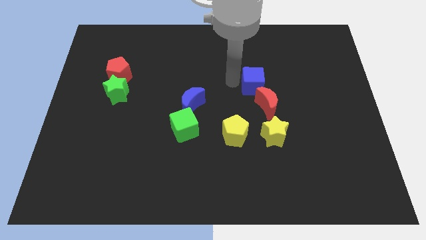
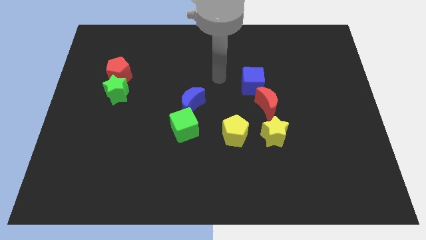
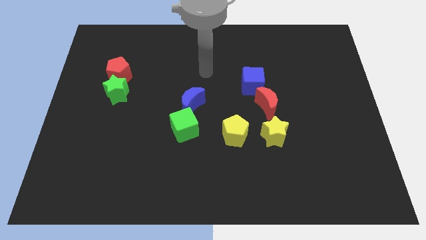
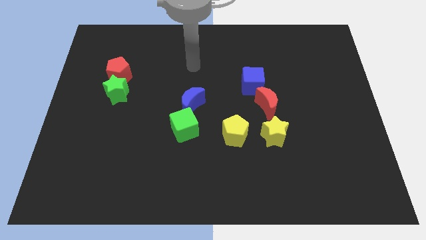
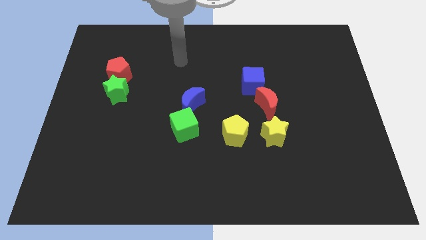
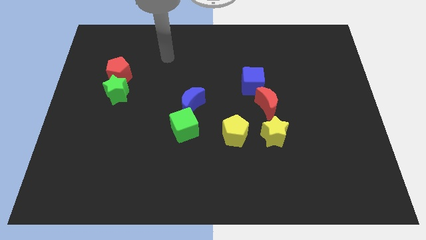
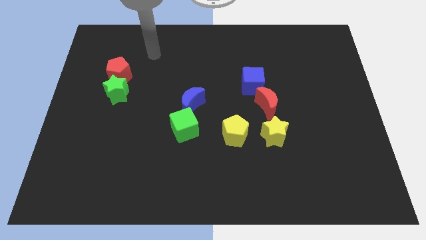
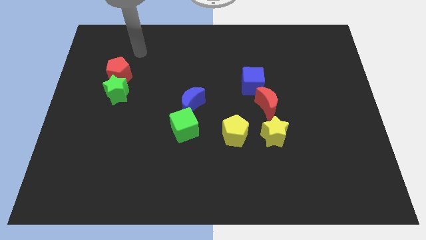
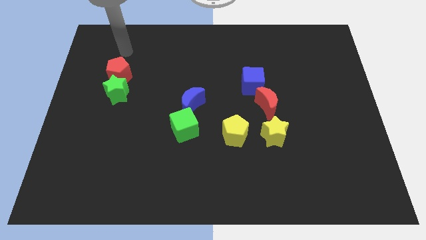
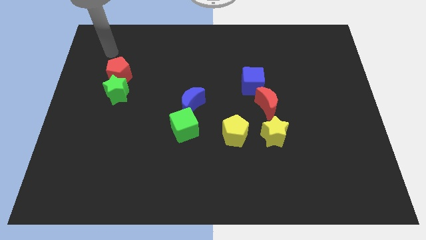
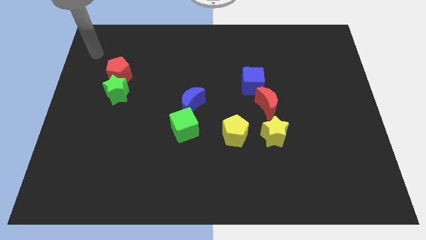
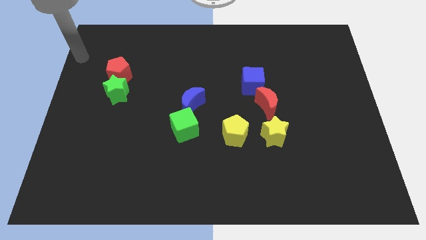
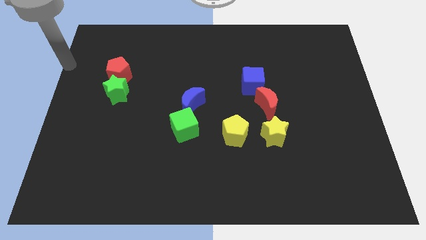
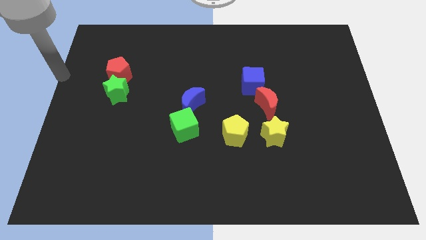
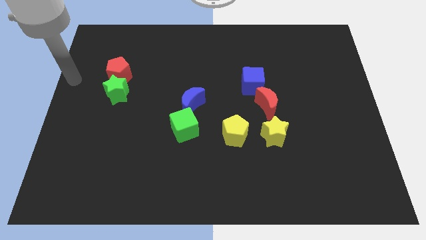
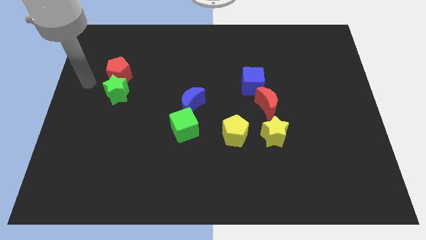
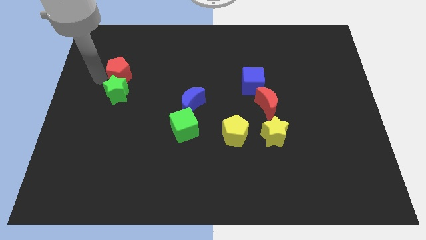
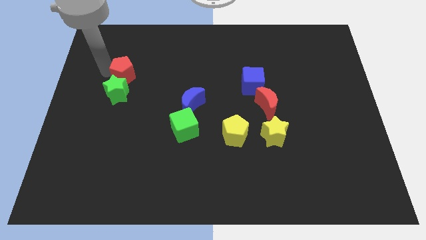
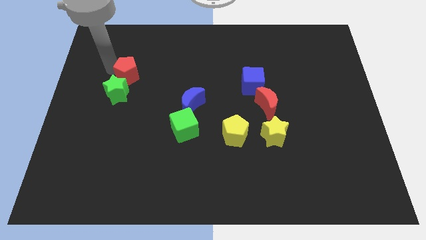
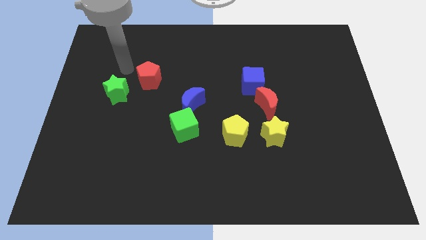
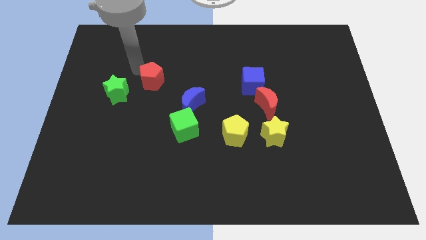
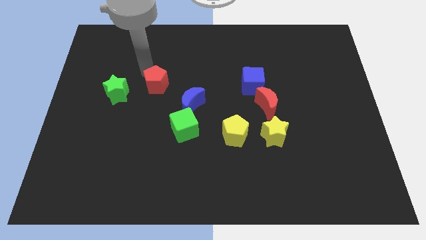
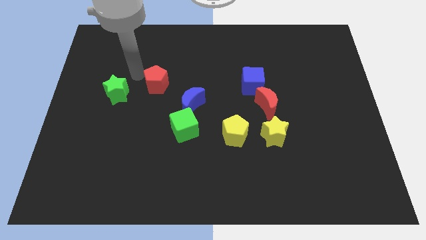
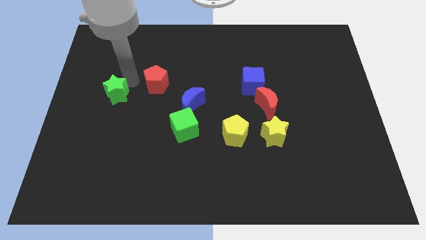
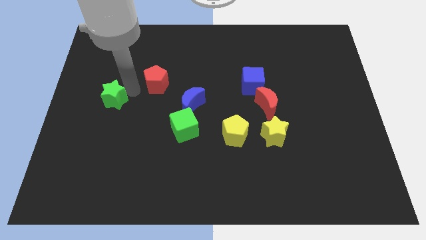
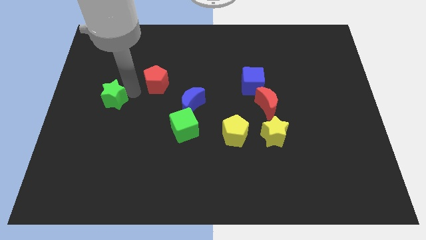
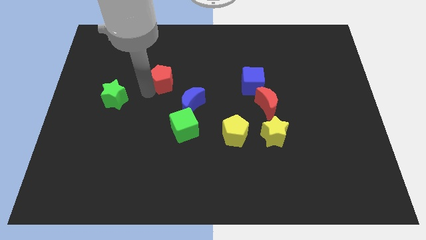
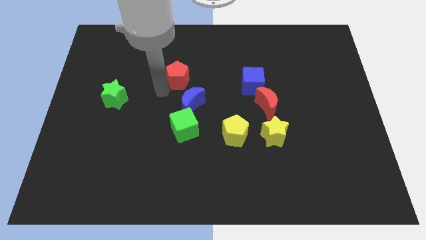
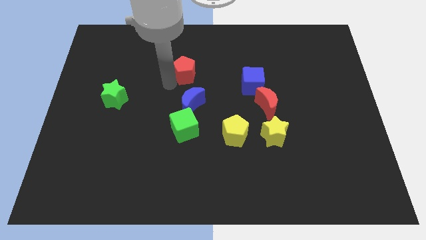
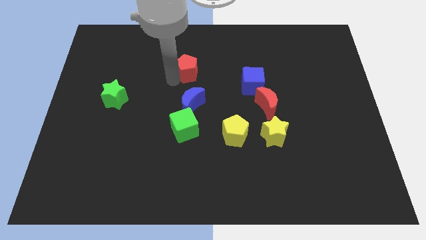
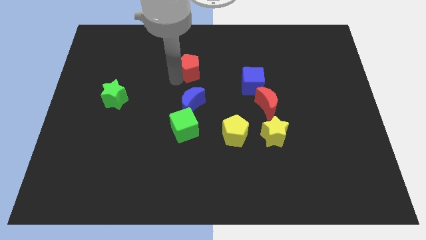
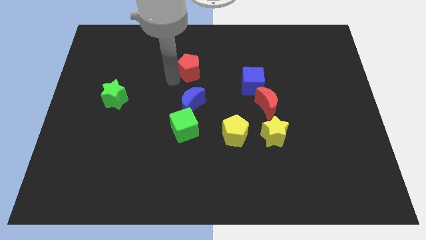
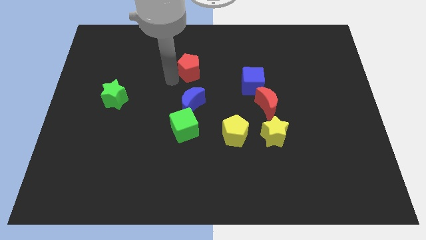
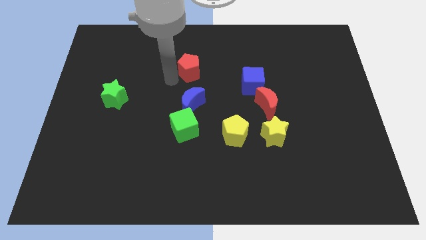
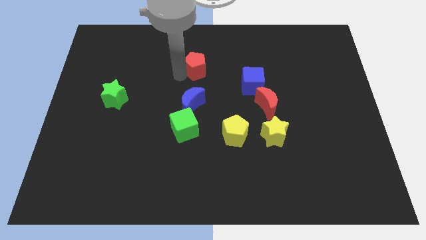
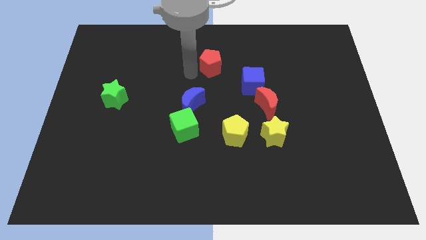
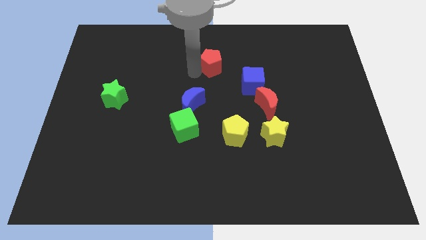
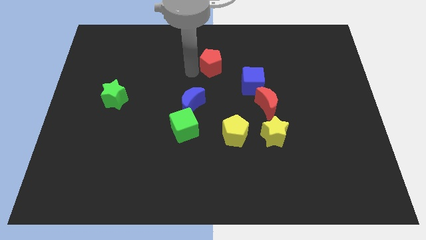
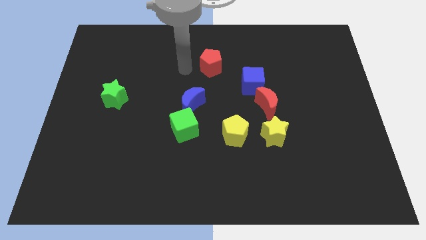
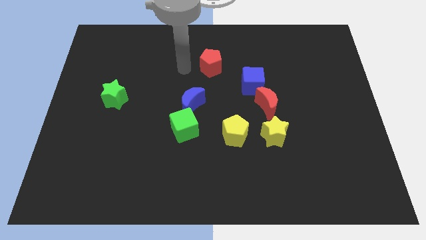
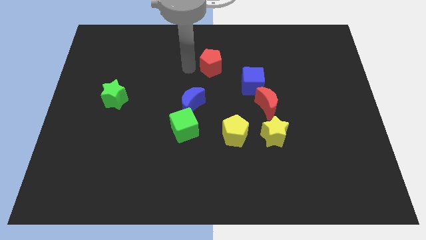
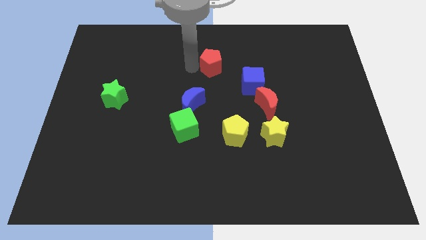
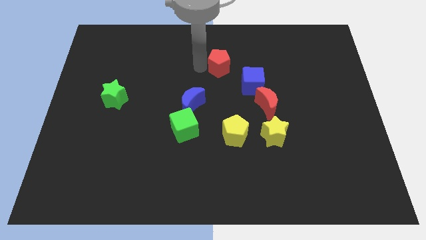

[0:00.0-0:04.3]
place the red pentagon diagonally to blue cube

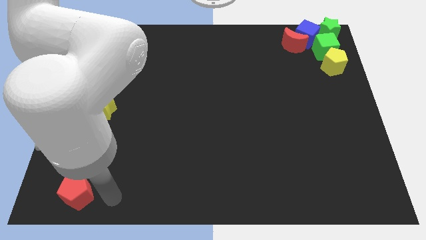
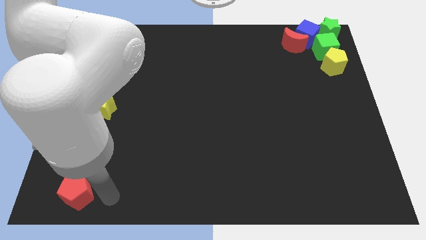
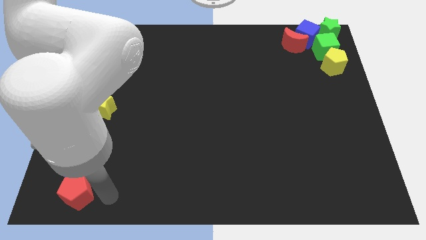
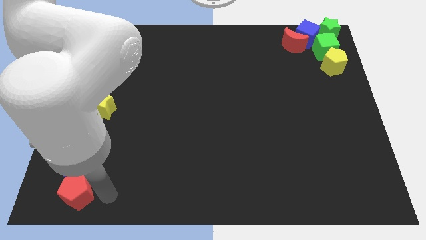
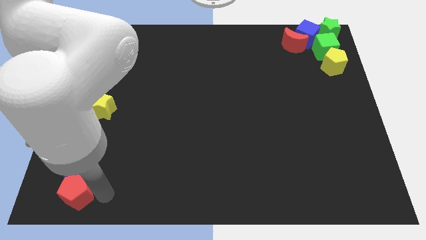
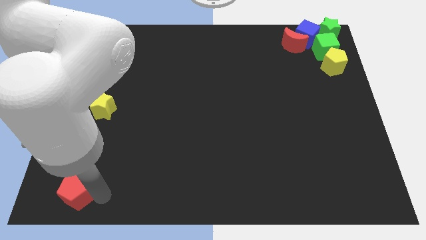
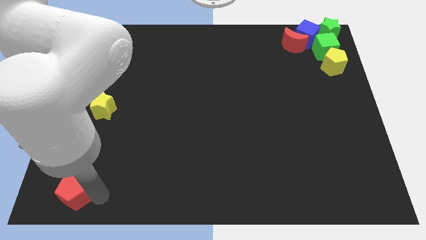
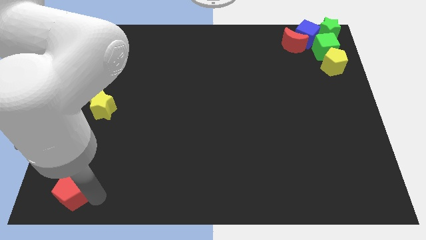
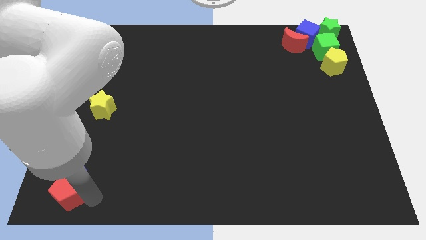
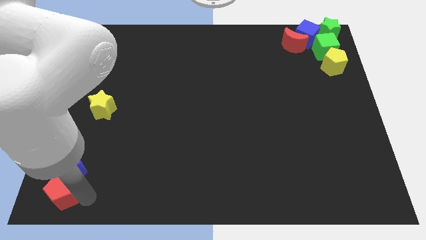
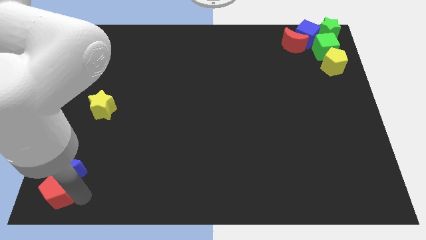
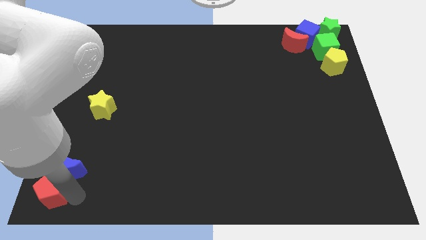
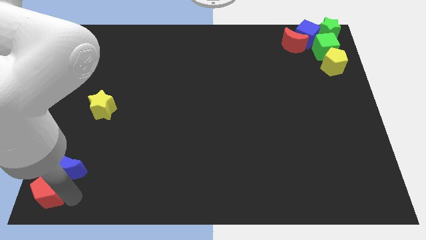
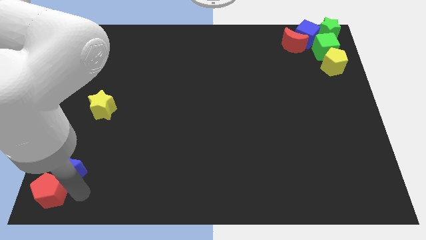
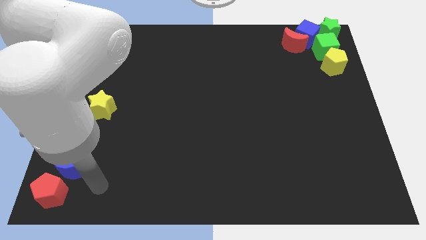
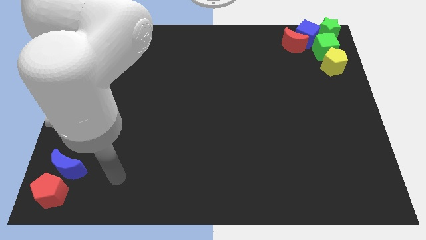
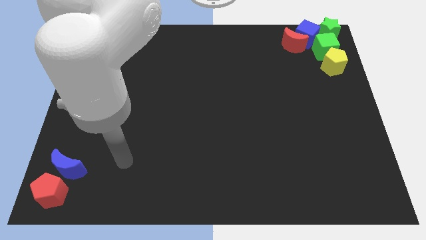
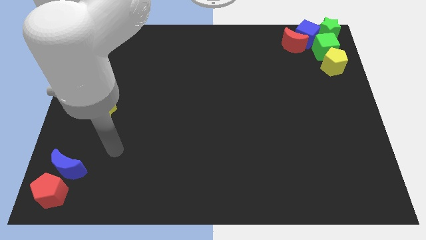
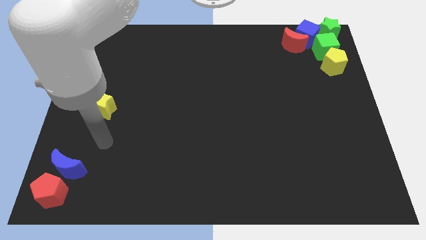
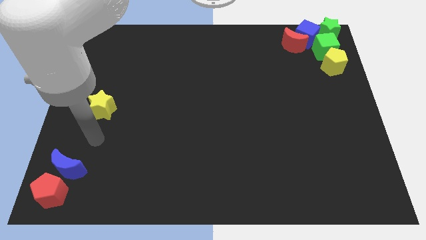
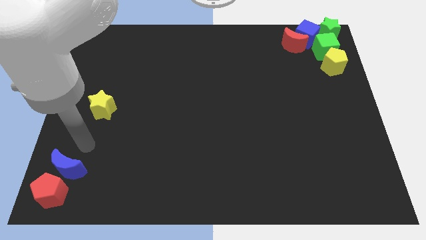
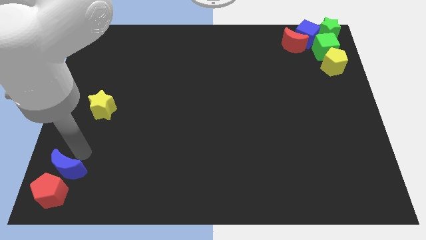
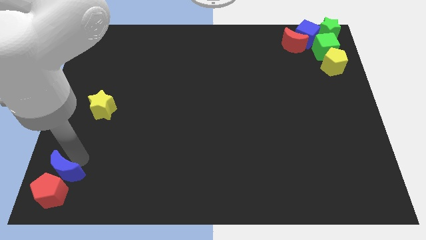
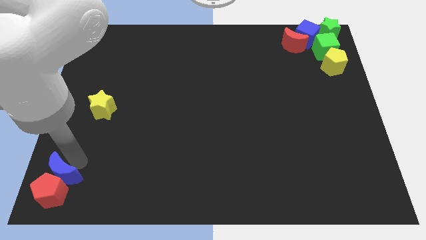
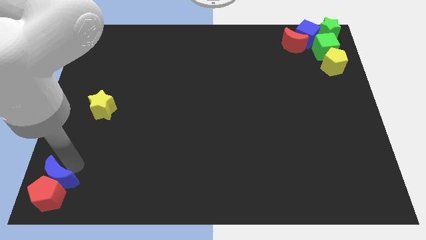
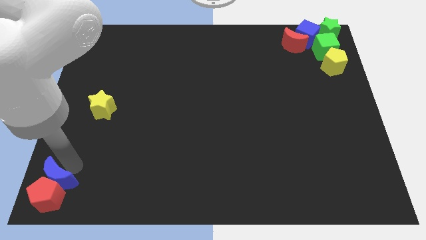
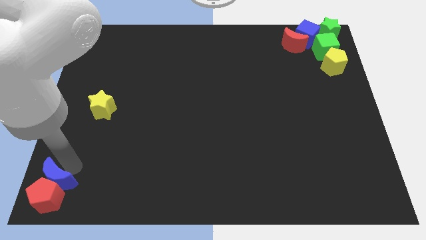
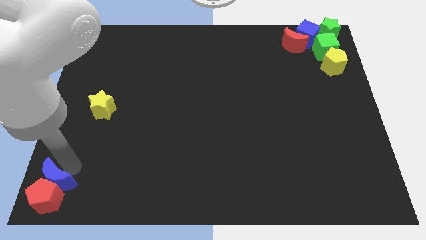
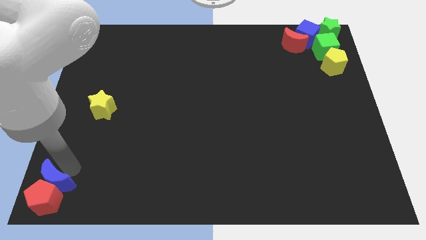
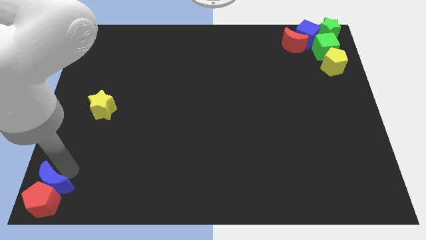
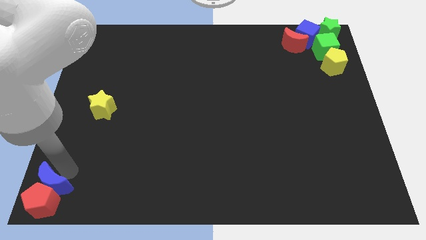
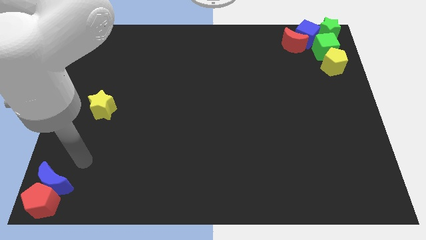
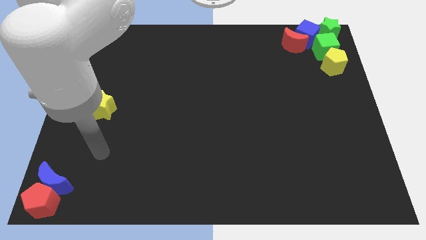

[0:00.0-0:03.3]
push blue crescent slightly towards down

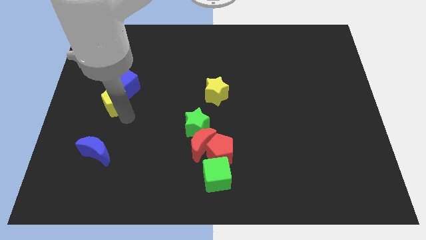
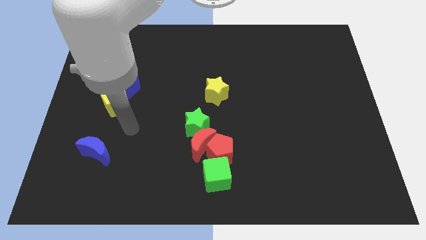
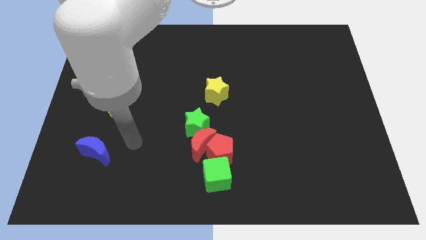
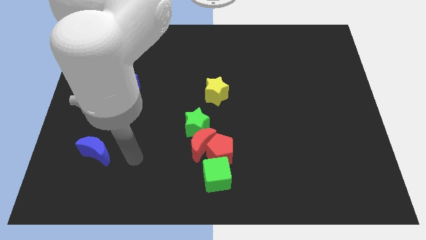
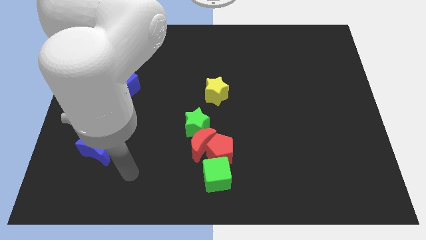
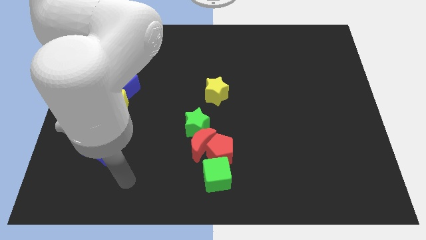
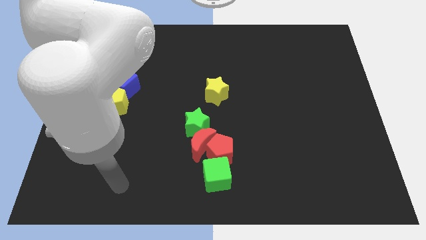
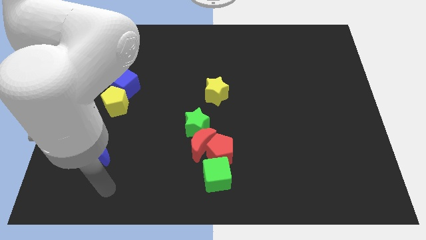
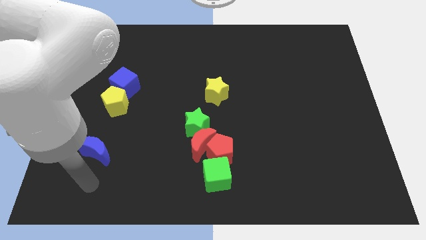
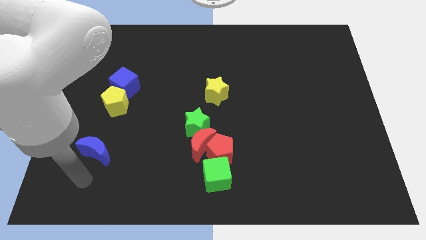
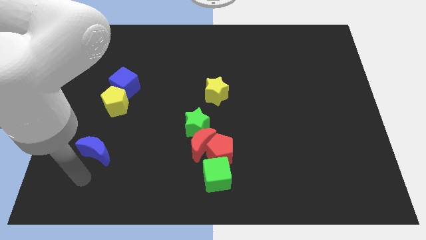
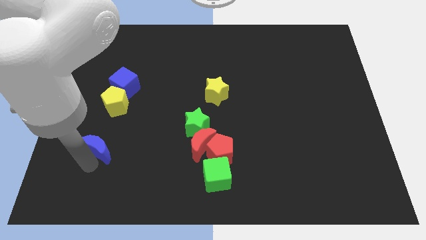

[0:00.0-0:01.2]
move your arm below the blue moon

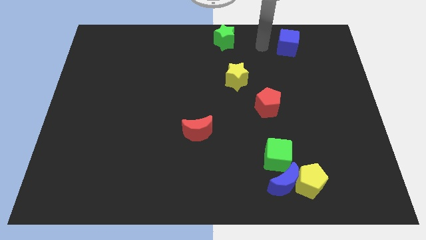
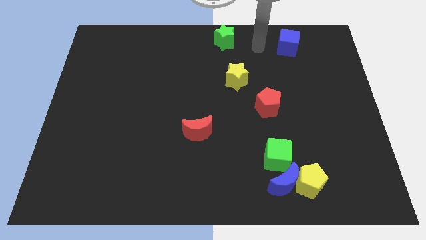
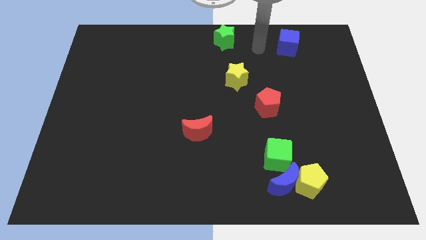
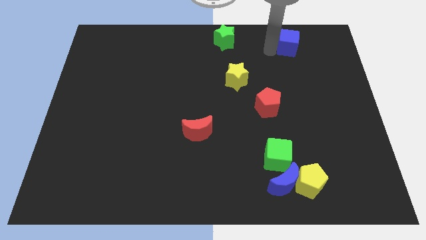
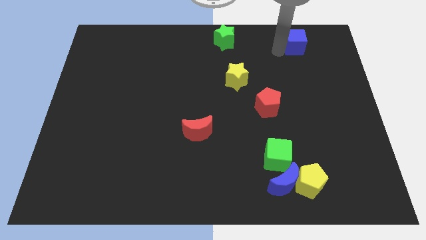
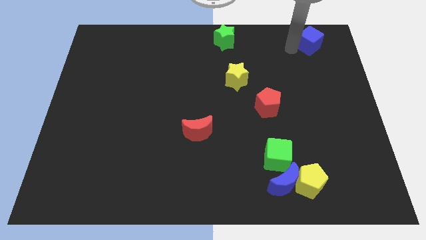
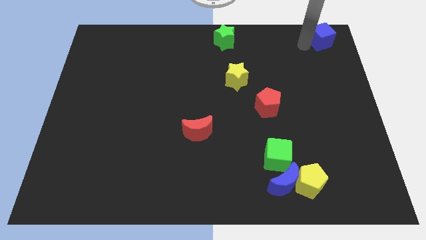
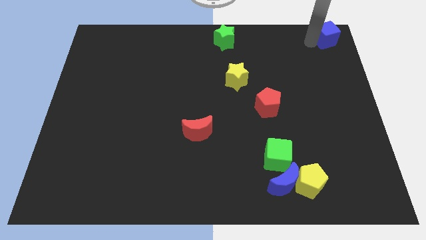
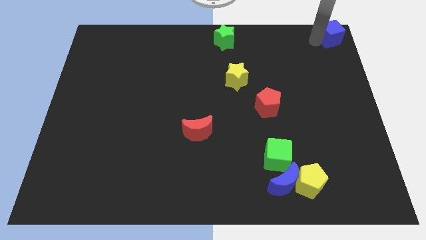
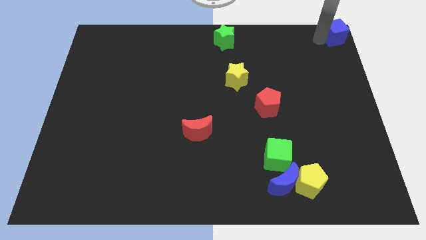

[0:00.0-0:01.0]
move the blue cube to the top right corner of the board
